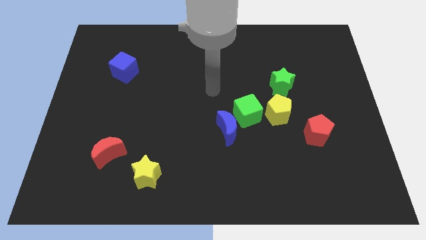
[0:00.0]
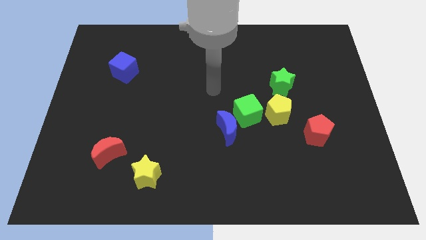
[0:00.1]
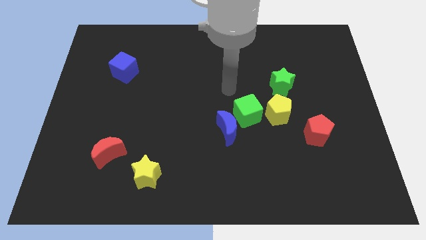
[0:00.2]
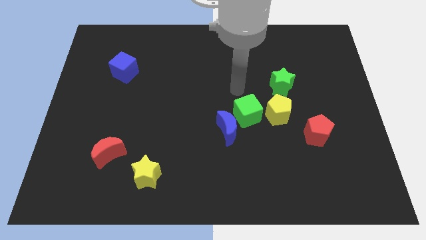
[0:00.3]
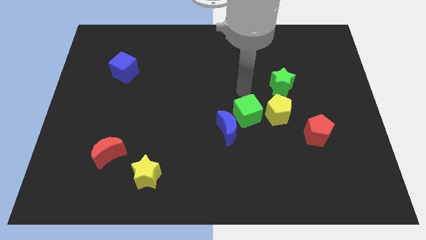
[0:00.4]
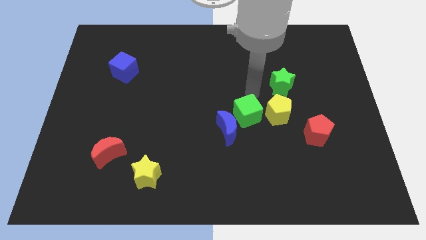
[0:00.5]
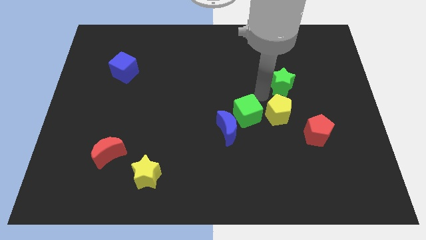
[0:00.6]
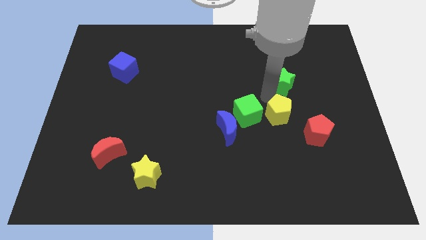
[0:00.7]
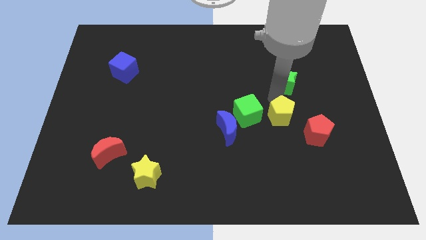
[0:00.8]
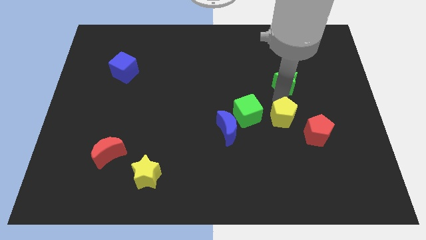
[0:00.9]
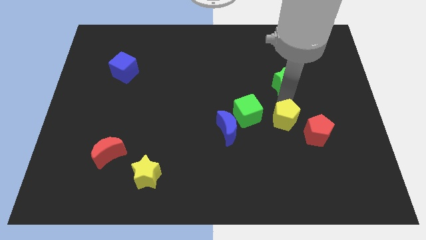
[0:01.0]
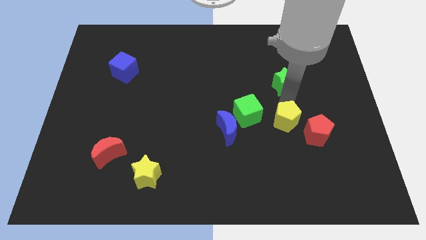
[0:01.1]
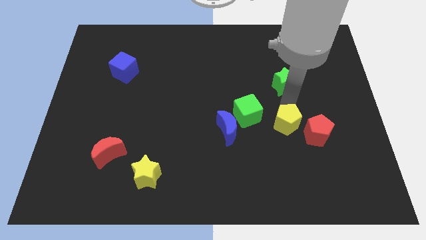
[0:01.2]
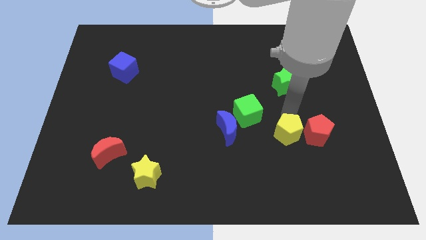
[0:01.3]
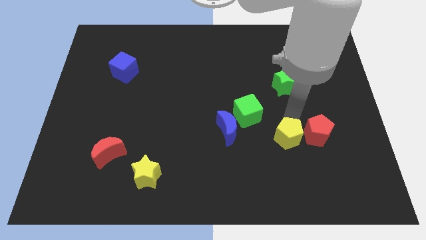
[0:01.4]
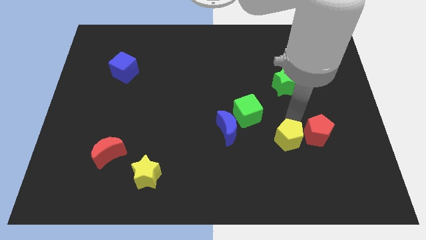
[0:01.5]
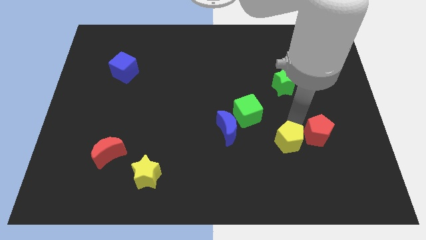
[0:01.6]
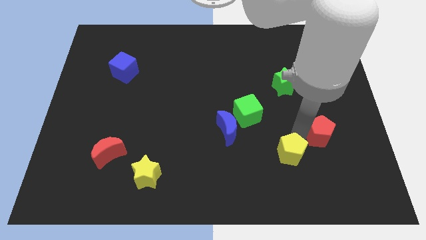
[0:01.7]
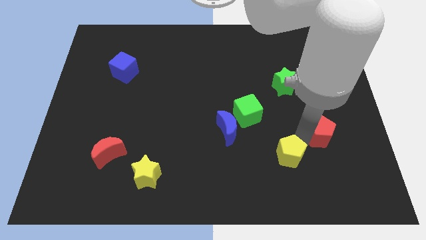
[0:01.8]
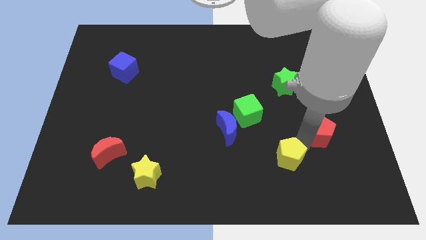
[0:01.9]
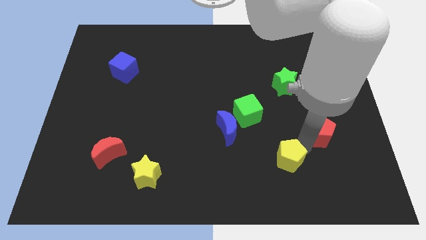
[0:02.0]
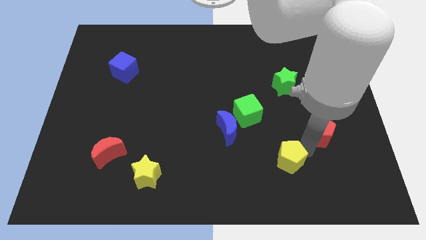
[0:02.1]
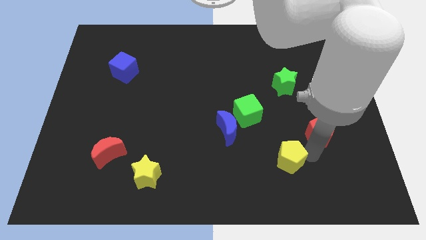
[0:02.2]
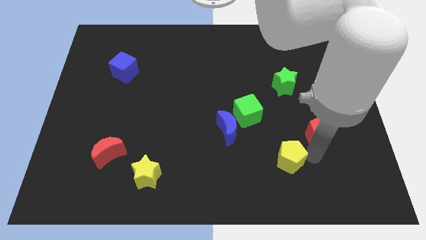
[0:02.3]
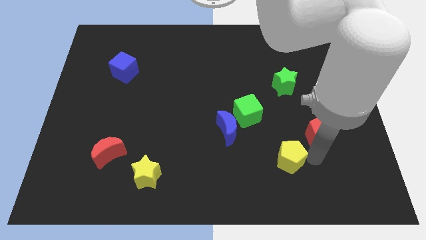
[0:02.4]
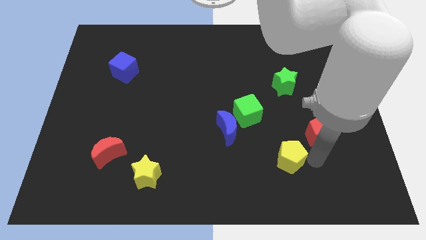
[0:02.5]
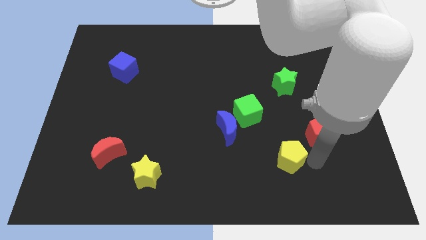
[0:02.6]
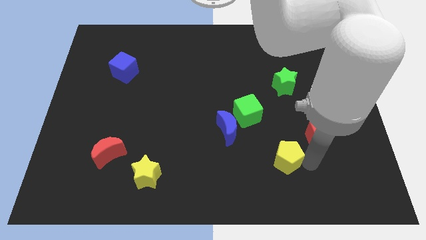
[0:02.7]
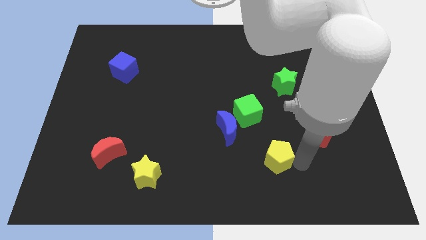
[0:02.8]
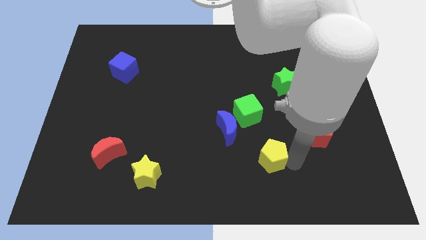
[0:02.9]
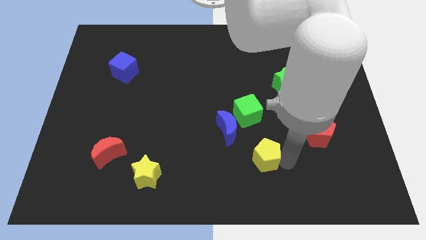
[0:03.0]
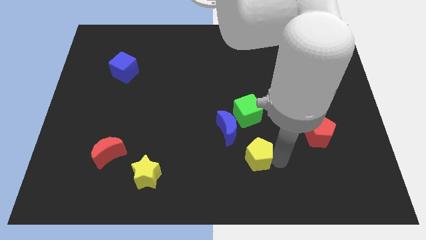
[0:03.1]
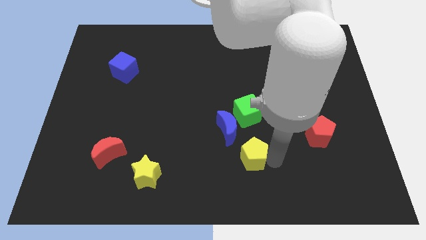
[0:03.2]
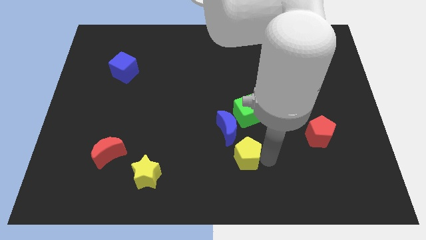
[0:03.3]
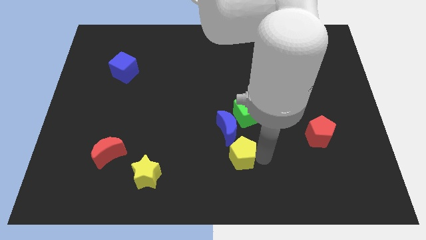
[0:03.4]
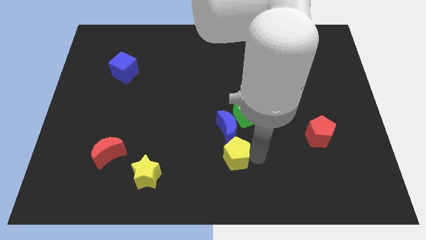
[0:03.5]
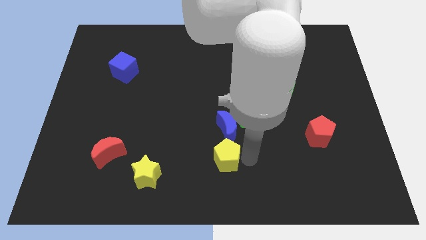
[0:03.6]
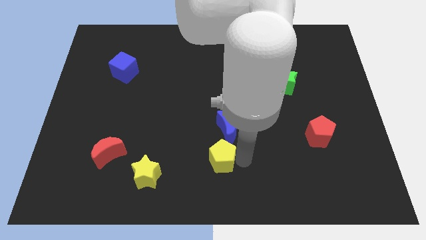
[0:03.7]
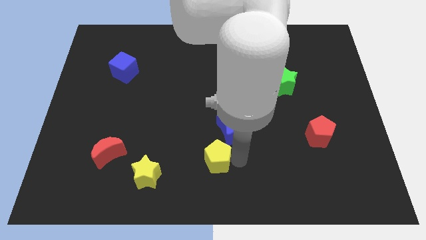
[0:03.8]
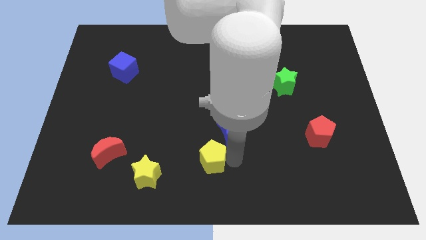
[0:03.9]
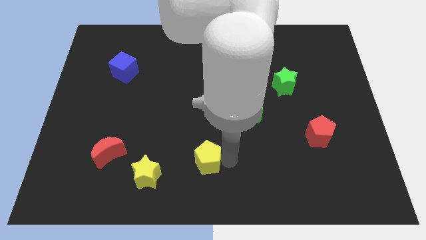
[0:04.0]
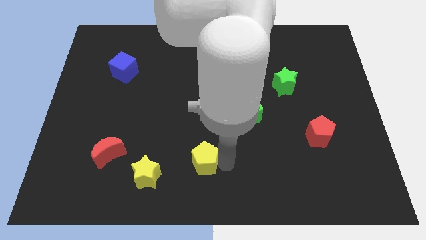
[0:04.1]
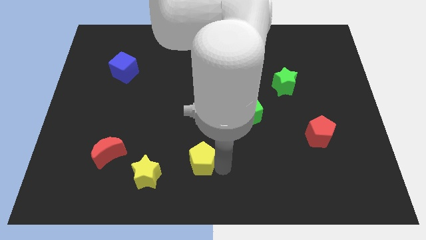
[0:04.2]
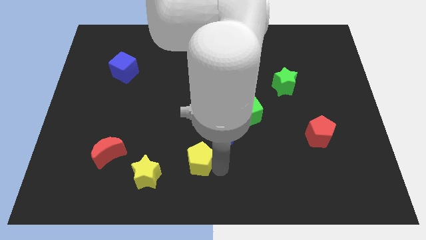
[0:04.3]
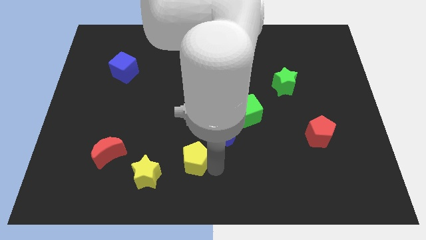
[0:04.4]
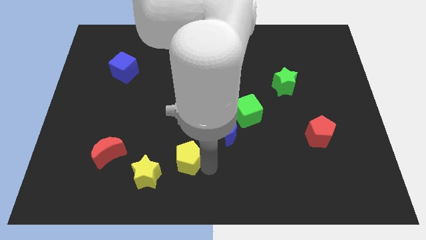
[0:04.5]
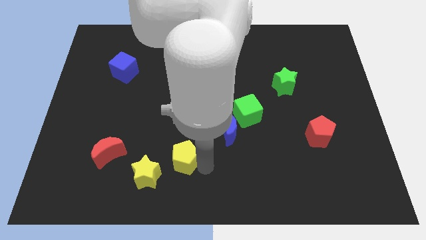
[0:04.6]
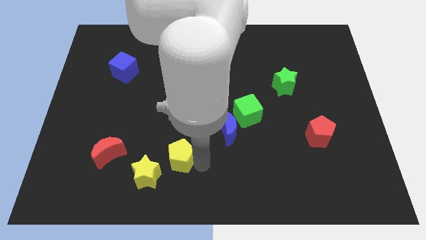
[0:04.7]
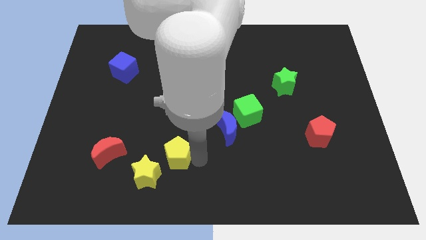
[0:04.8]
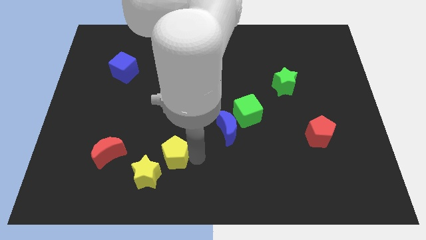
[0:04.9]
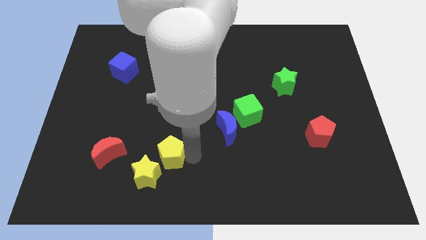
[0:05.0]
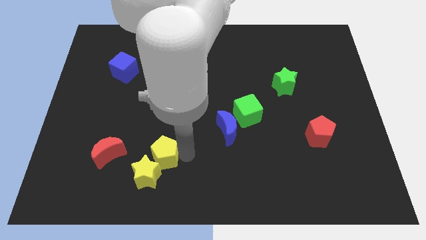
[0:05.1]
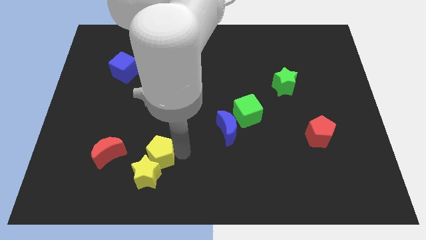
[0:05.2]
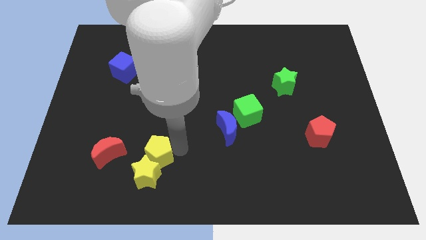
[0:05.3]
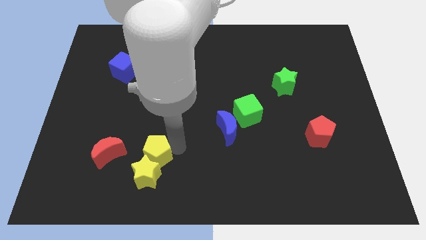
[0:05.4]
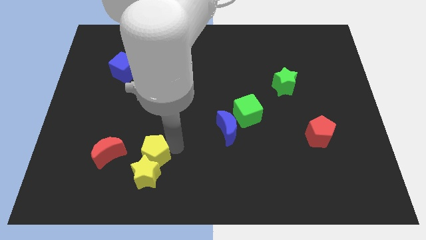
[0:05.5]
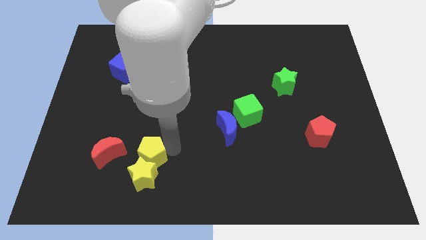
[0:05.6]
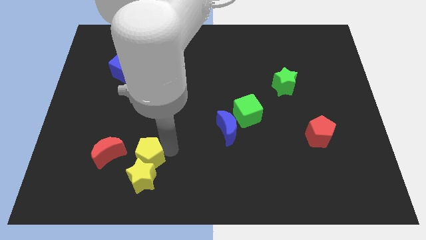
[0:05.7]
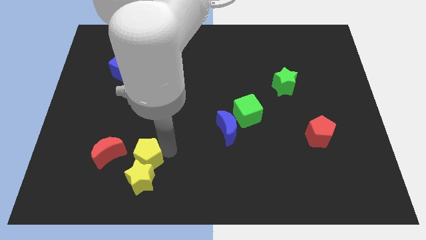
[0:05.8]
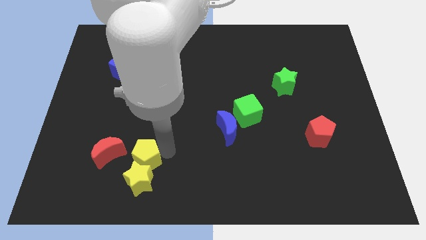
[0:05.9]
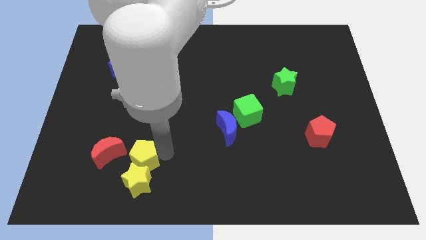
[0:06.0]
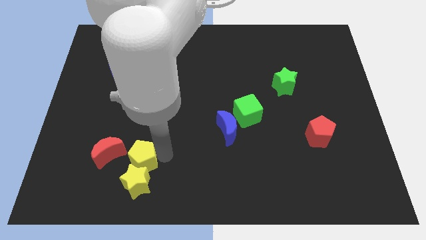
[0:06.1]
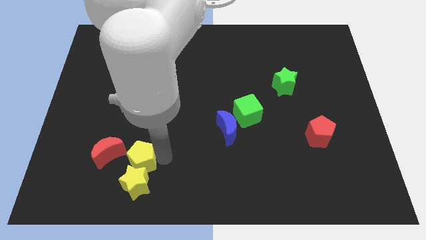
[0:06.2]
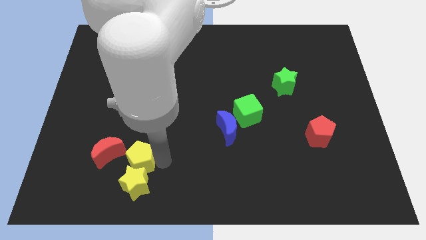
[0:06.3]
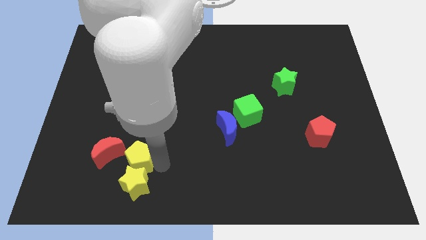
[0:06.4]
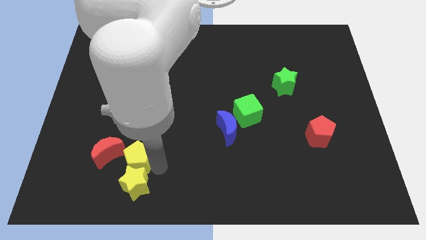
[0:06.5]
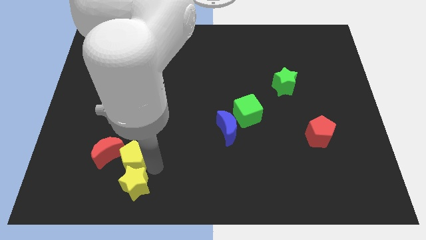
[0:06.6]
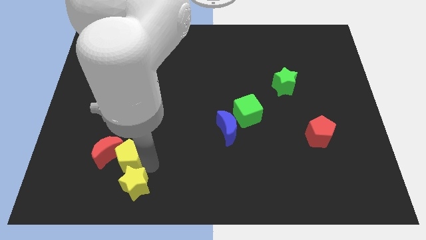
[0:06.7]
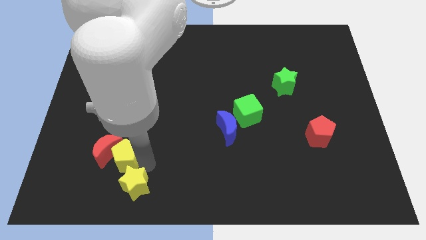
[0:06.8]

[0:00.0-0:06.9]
push the yellow pentagon towards the red moon

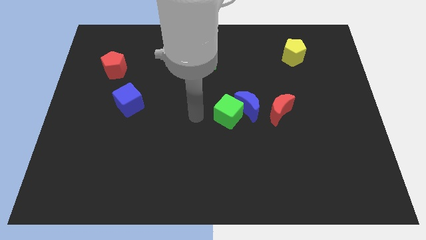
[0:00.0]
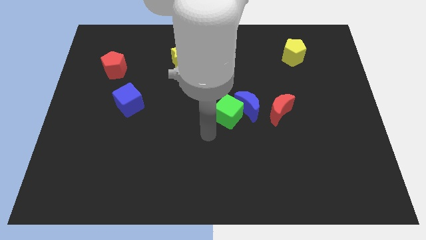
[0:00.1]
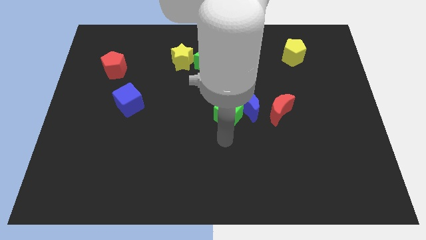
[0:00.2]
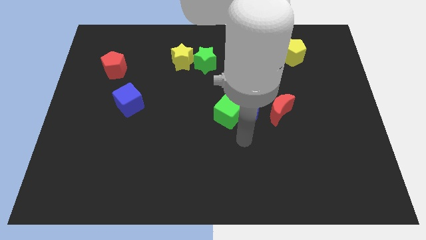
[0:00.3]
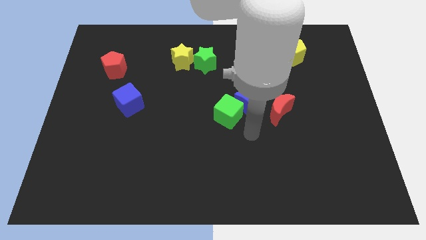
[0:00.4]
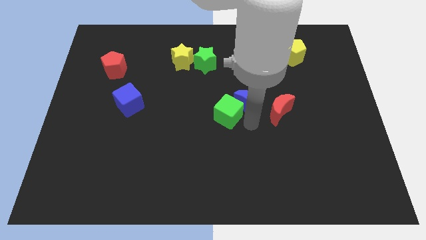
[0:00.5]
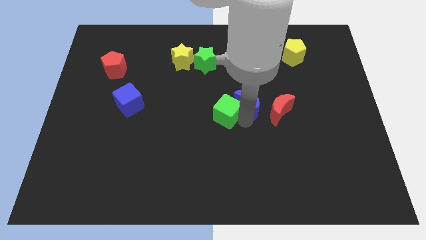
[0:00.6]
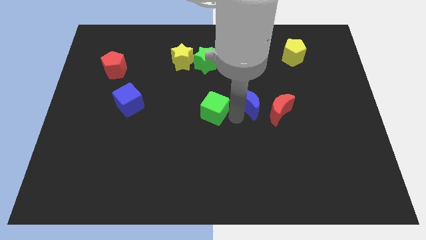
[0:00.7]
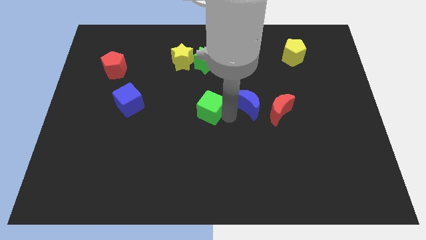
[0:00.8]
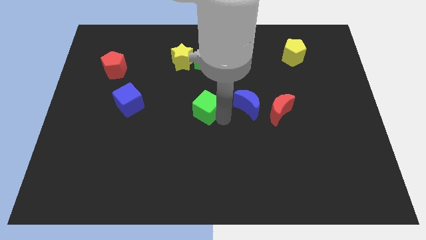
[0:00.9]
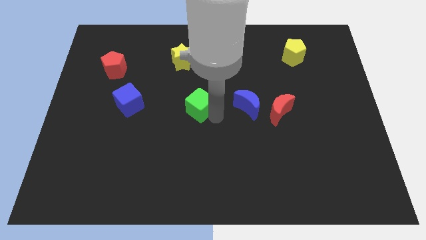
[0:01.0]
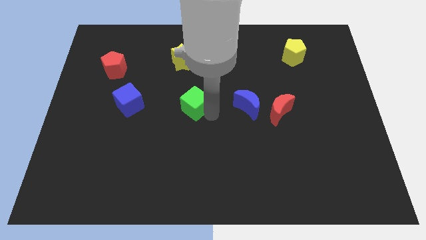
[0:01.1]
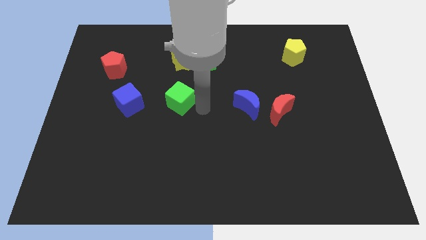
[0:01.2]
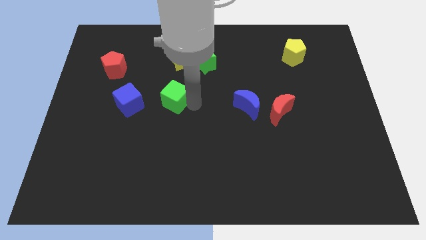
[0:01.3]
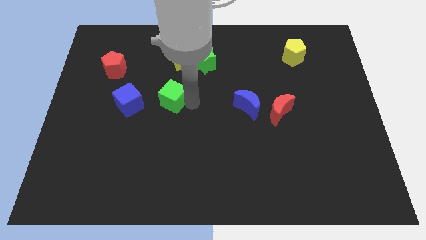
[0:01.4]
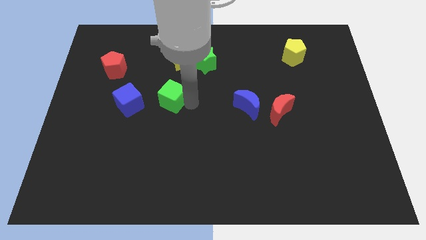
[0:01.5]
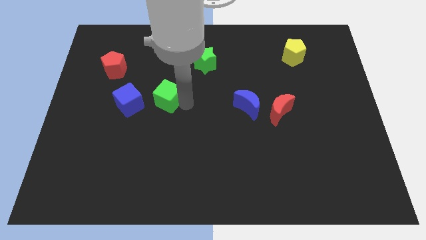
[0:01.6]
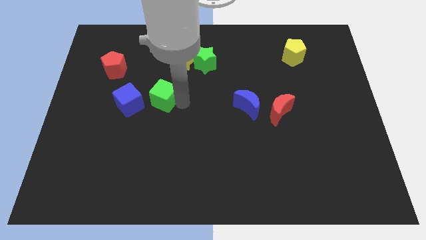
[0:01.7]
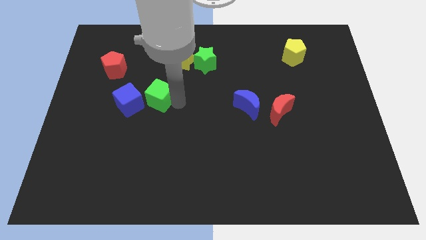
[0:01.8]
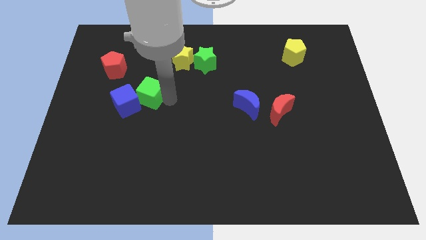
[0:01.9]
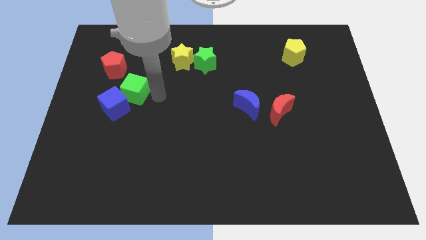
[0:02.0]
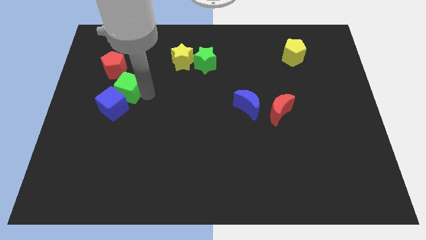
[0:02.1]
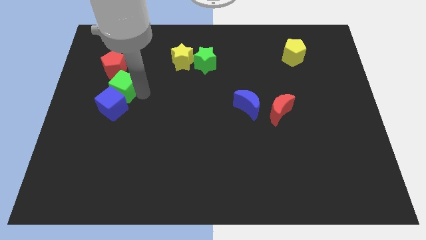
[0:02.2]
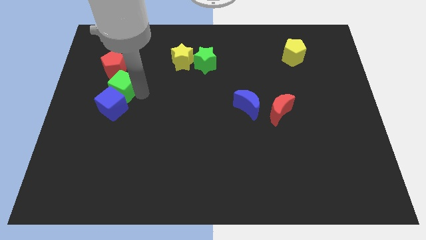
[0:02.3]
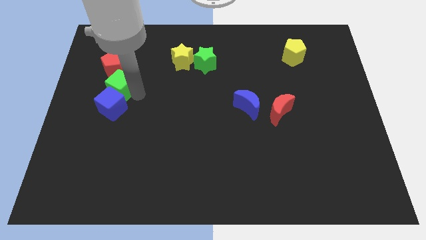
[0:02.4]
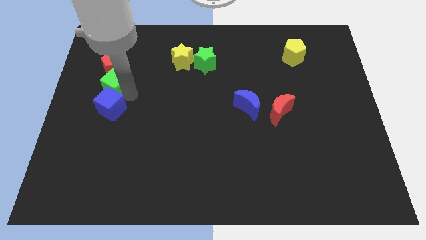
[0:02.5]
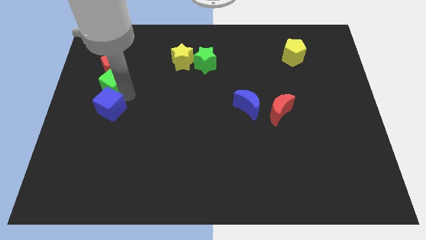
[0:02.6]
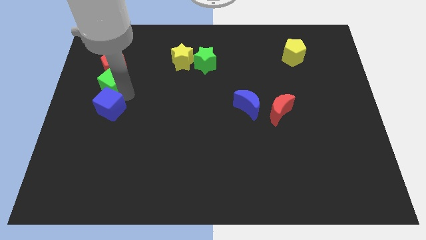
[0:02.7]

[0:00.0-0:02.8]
put the green cube towards the red pentagon
